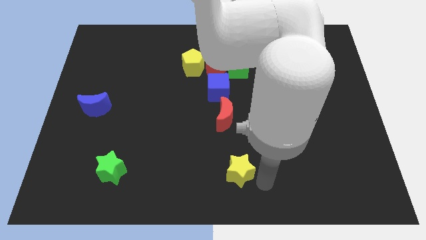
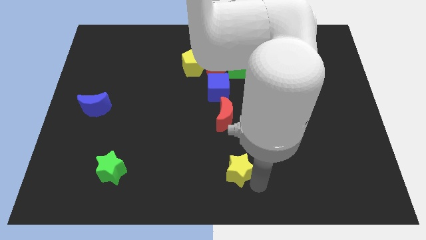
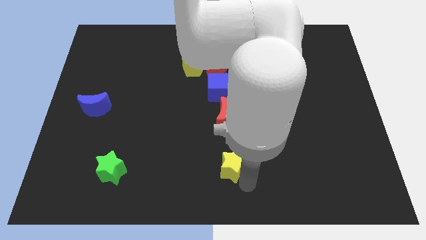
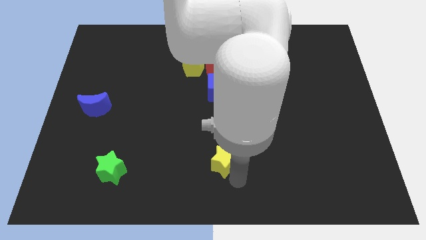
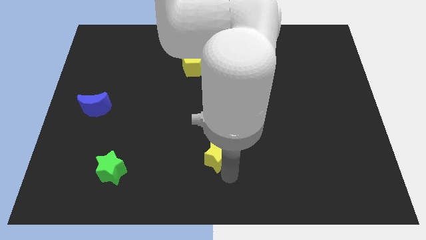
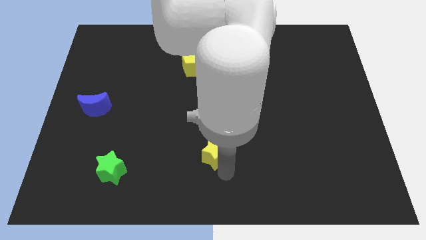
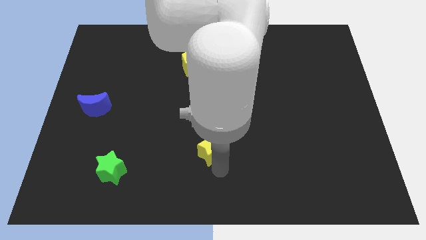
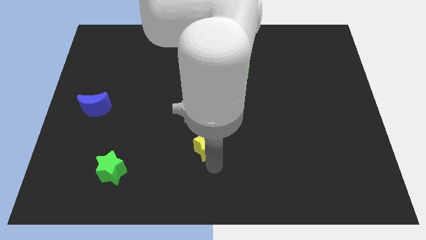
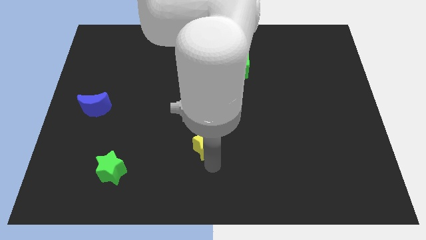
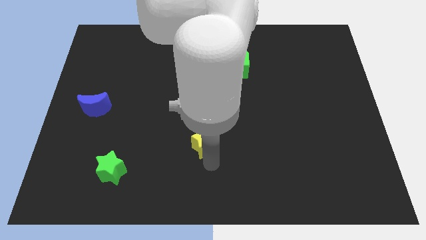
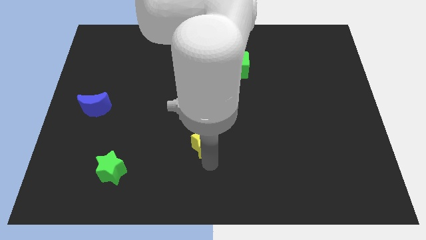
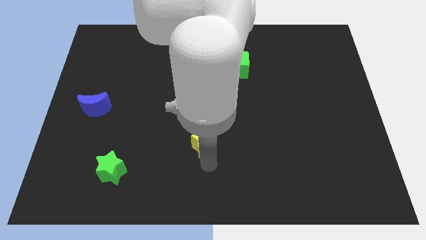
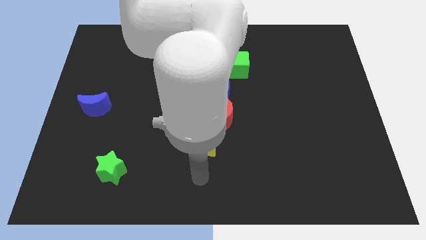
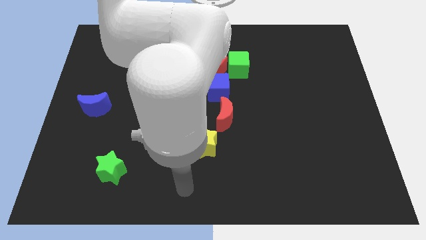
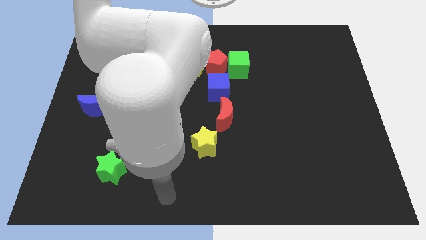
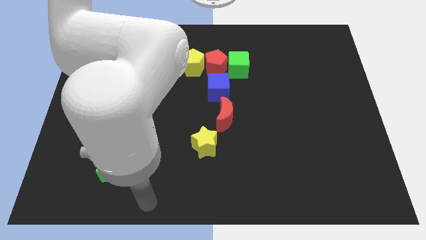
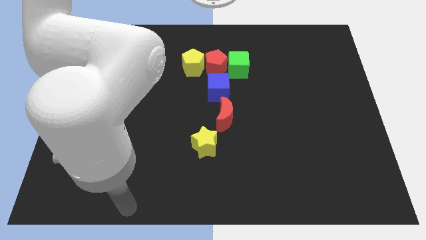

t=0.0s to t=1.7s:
move the yellow star to the bottom left side of the red crescent

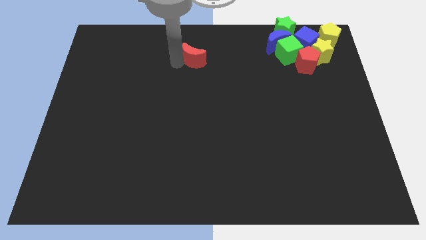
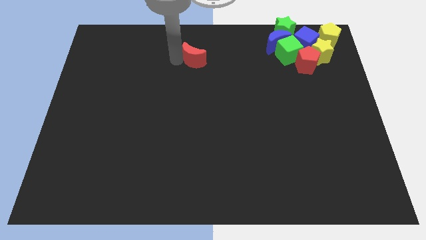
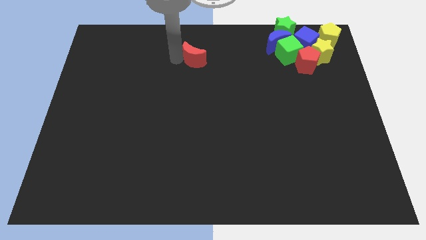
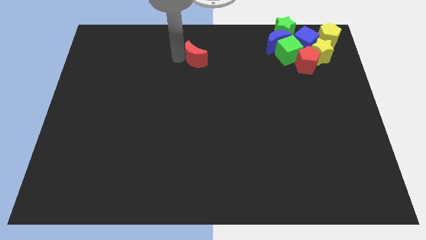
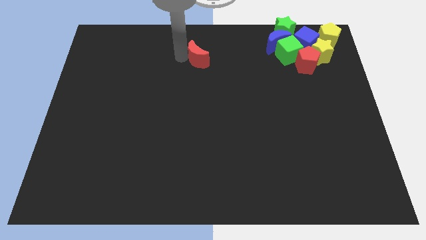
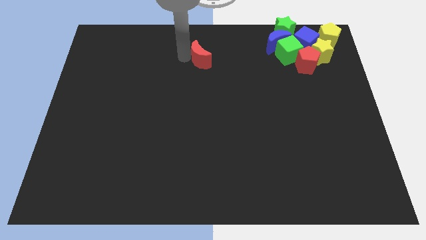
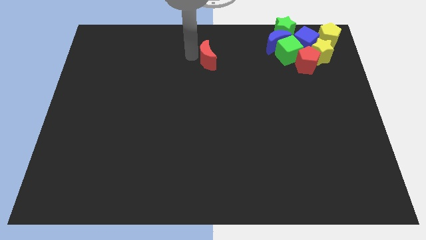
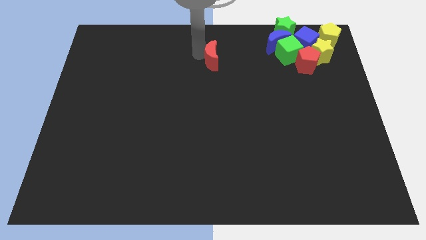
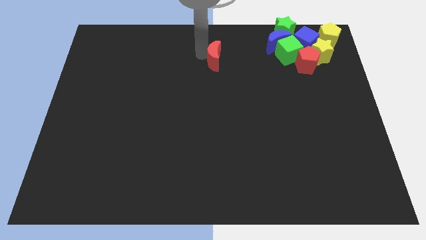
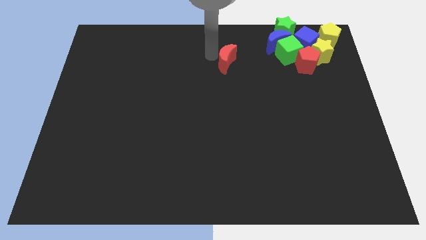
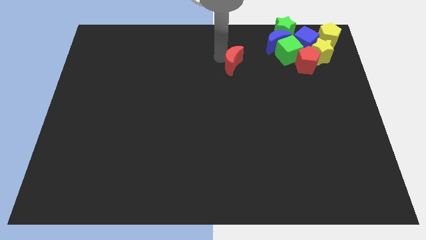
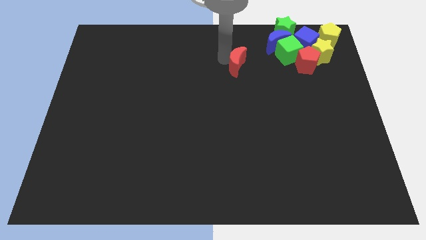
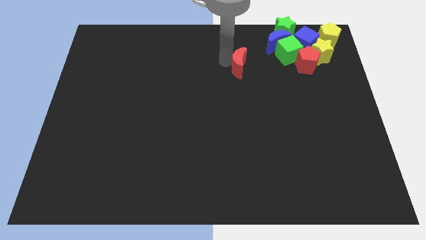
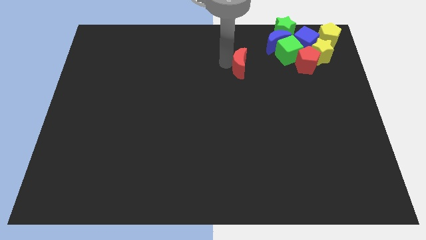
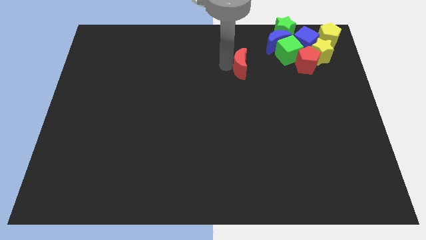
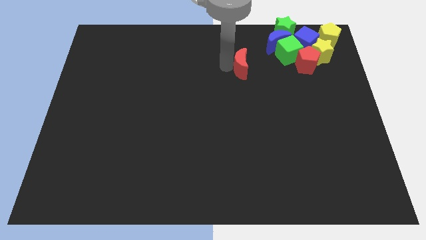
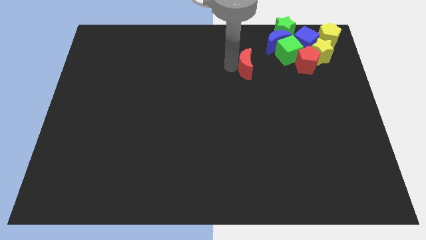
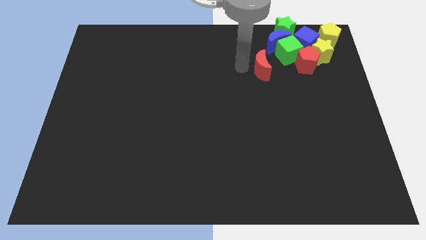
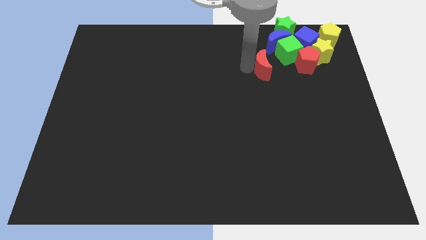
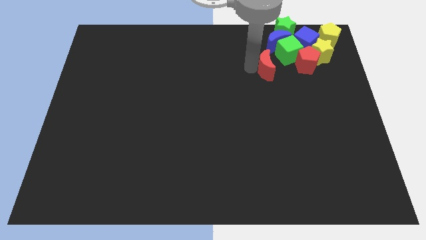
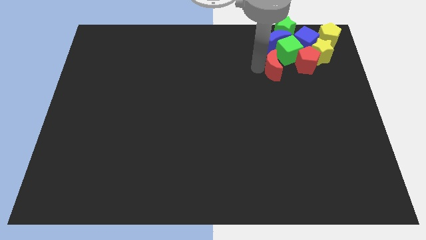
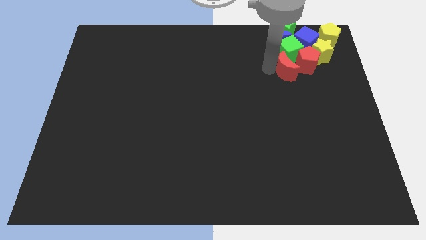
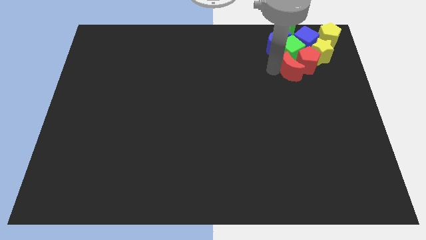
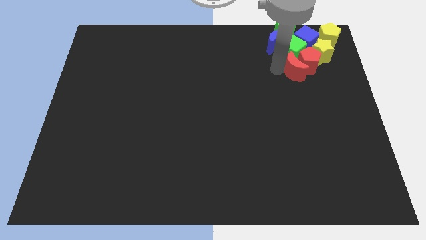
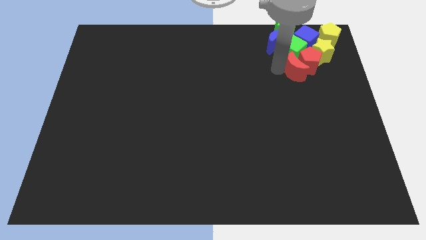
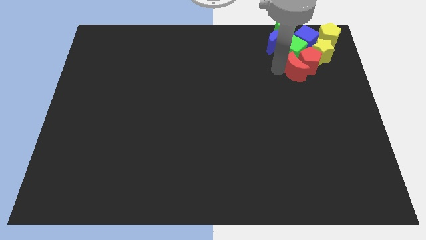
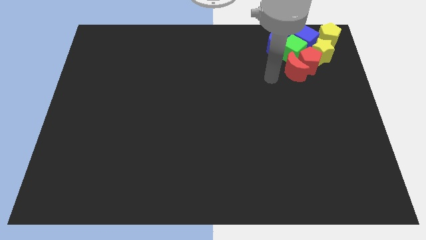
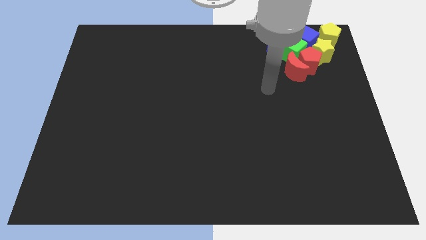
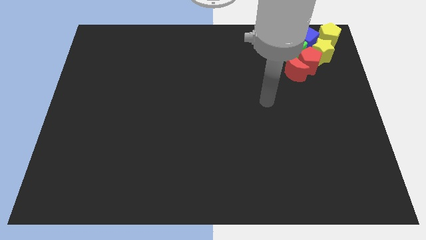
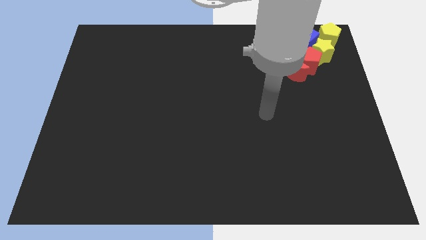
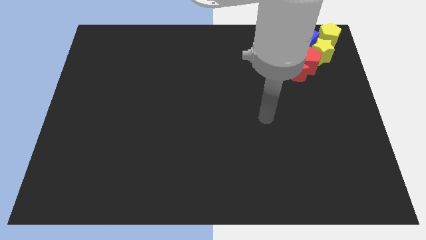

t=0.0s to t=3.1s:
place red crescent below red pentagon

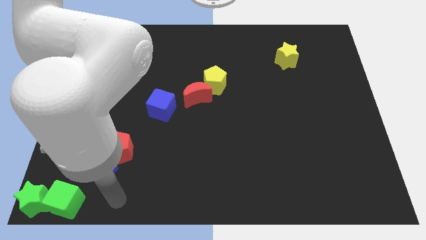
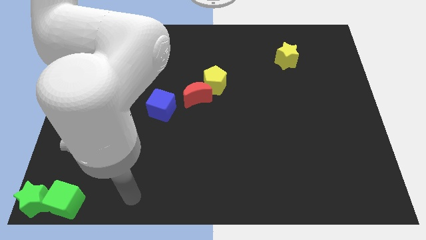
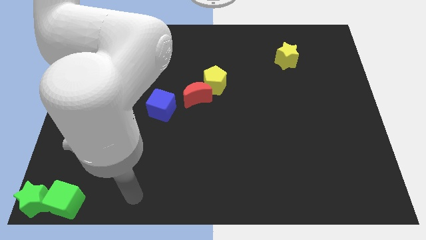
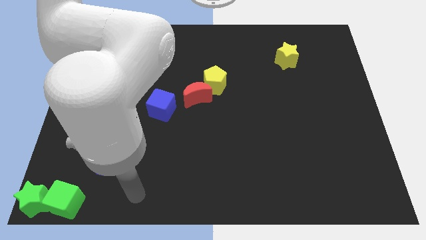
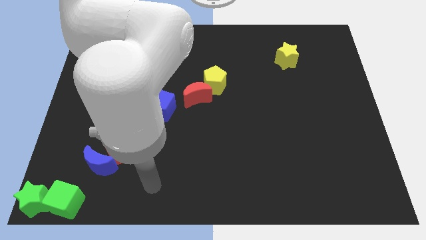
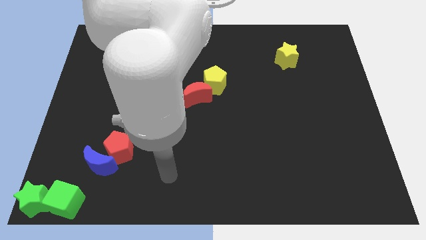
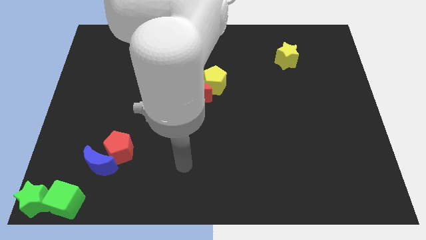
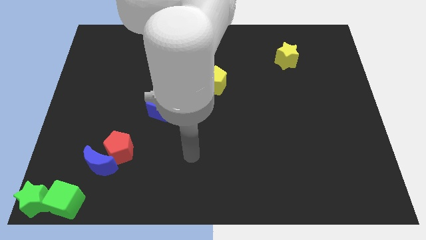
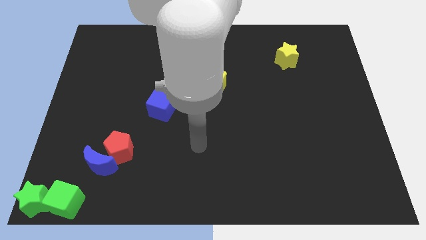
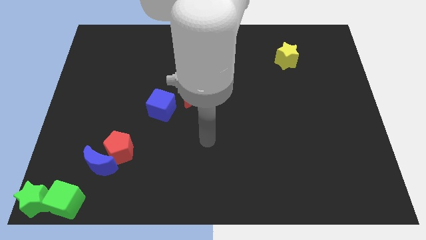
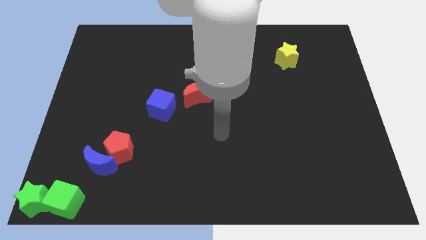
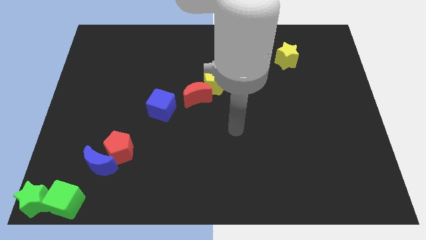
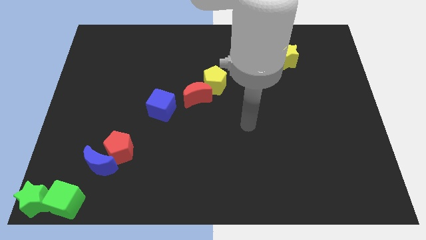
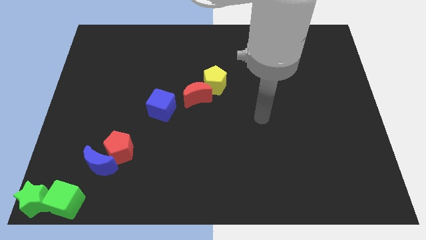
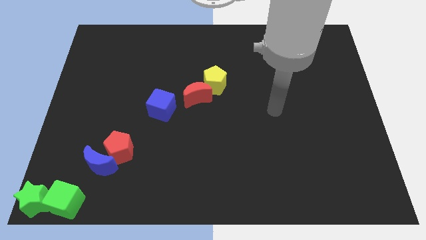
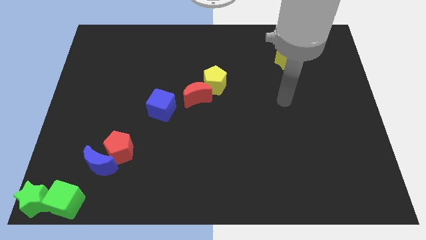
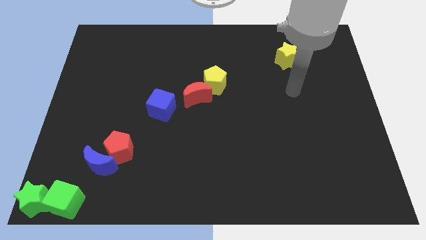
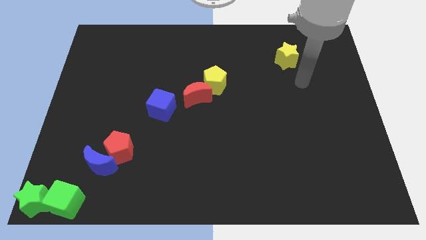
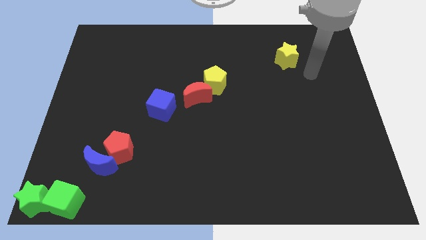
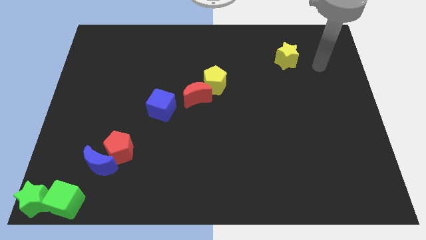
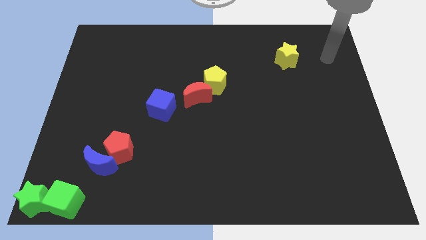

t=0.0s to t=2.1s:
move your arm near yellow star

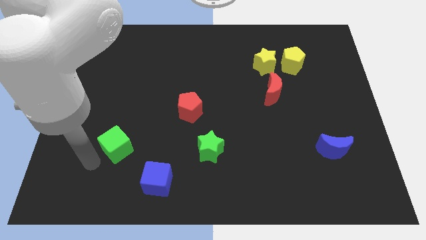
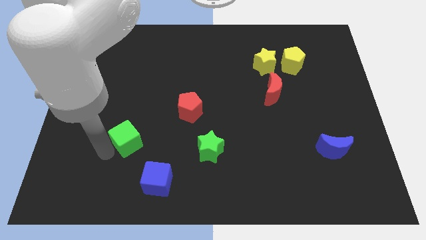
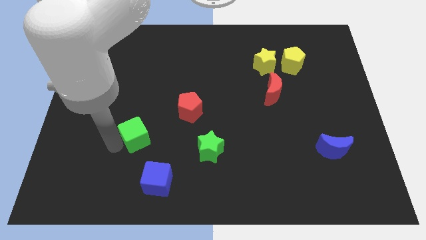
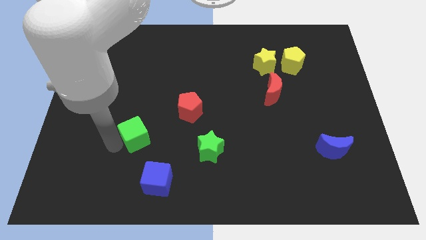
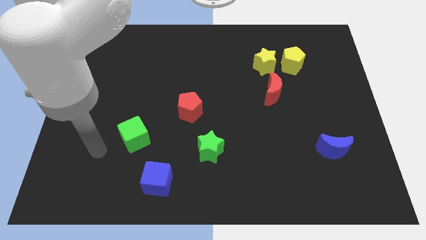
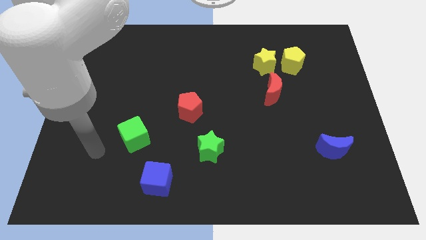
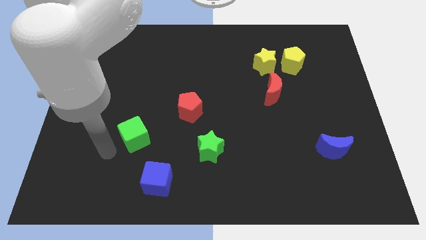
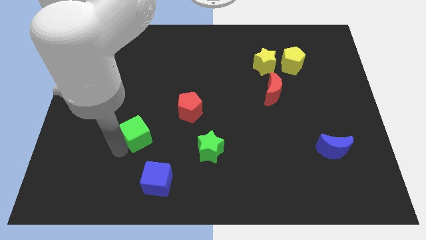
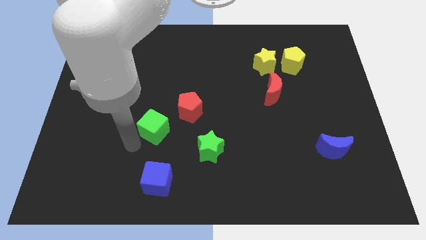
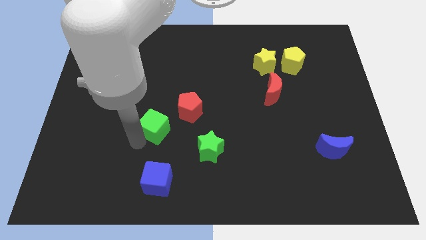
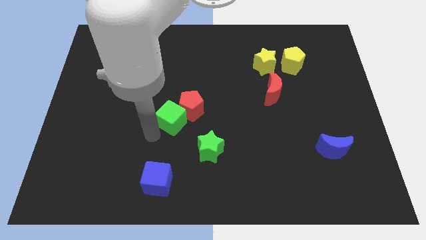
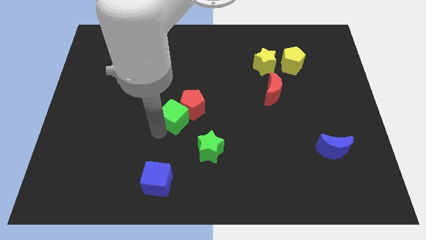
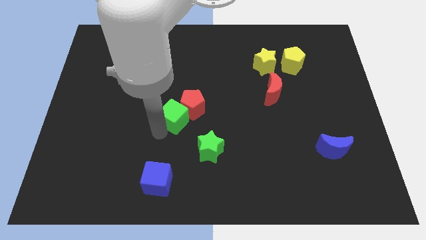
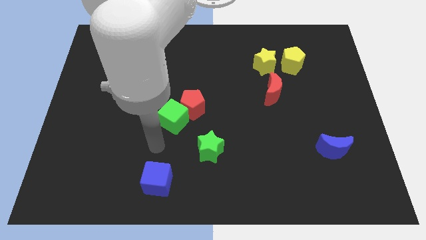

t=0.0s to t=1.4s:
push the green cube into the red pentagon

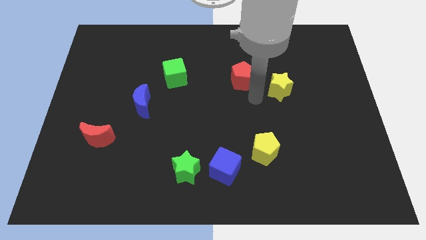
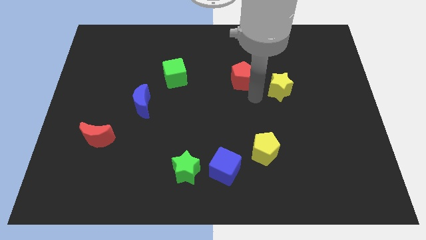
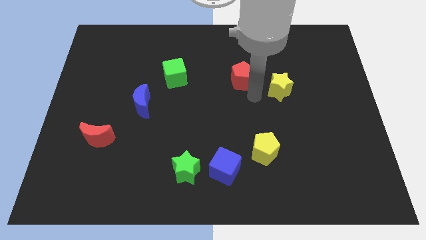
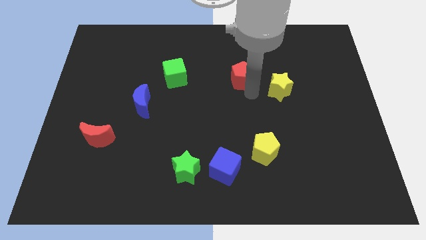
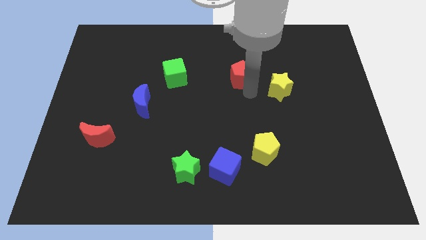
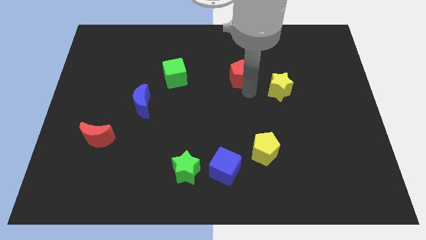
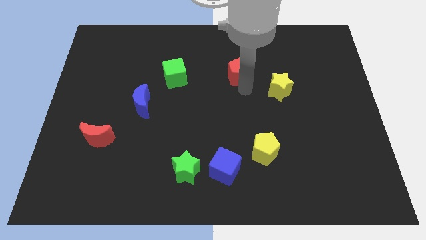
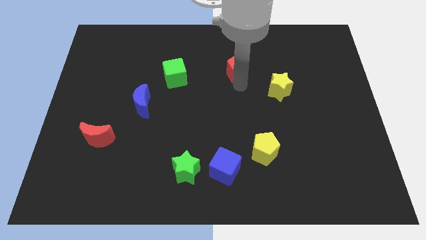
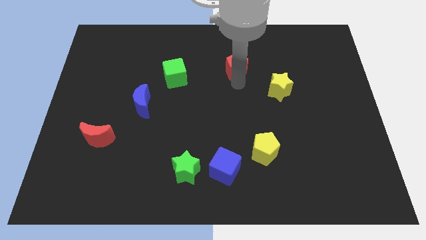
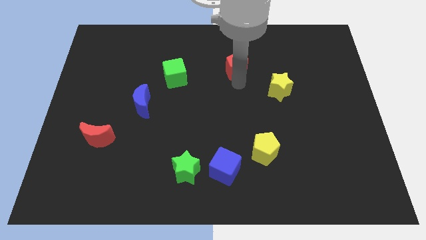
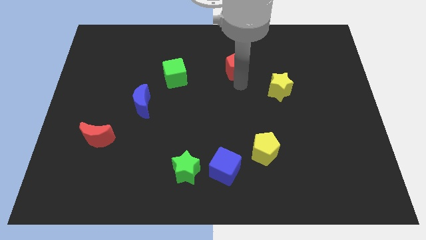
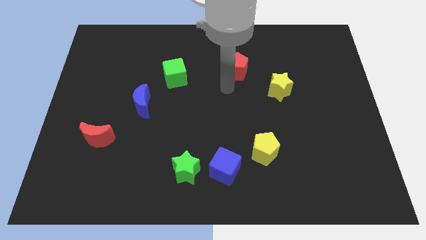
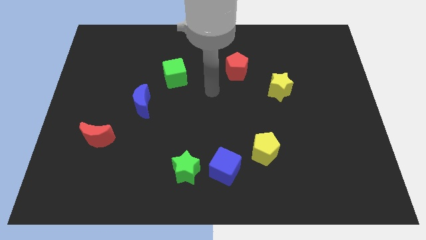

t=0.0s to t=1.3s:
push red pentagon upwards
